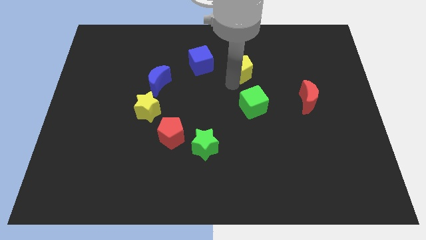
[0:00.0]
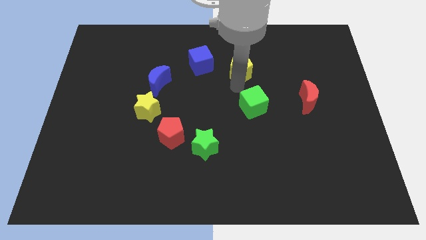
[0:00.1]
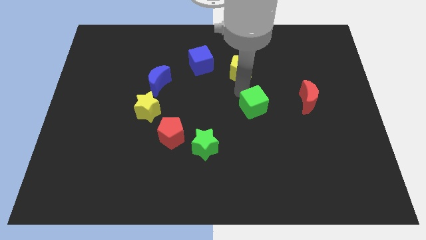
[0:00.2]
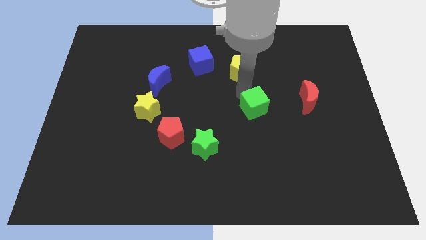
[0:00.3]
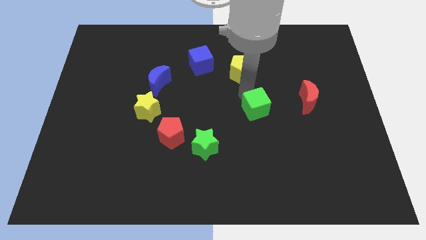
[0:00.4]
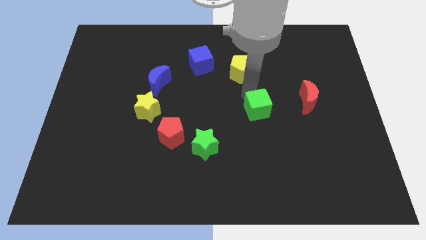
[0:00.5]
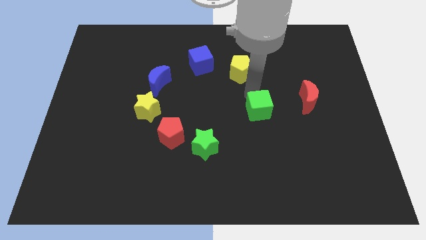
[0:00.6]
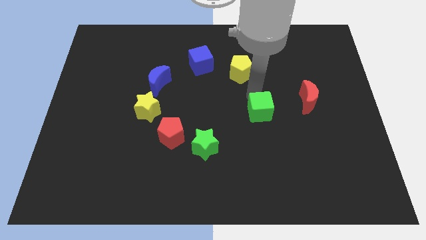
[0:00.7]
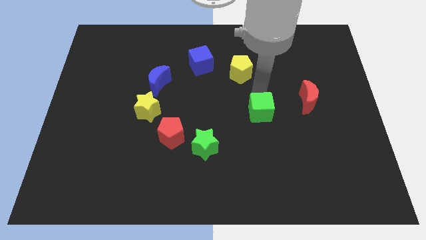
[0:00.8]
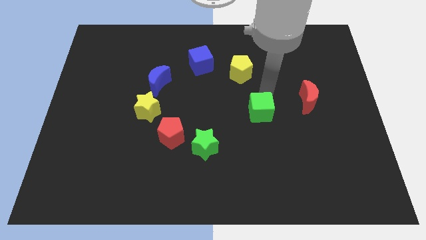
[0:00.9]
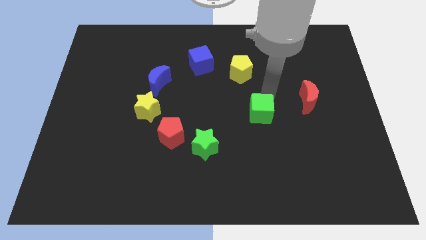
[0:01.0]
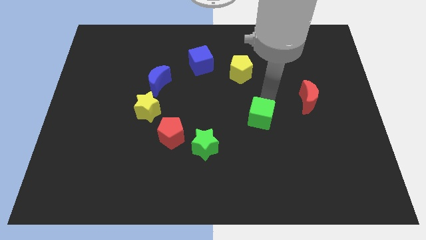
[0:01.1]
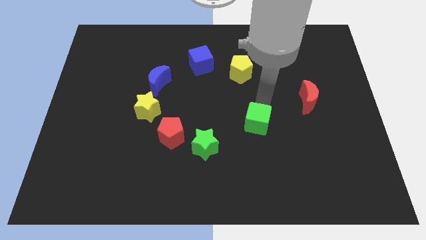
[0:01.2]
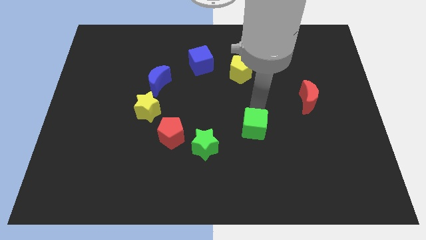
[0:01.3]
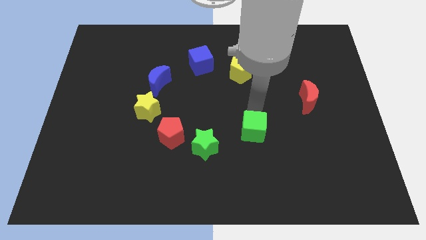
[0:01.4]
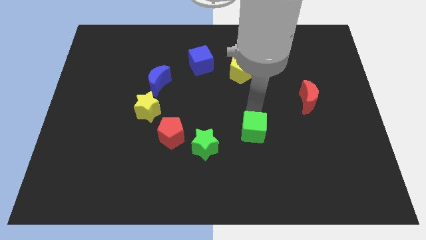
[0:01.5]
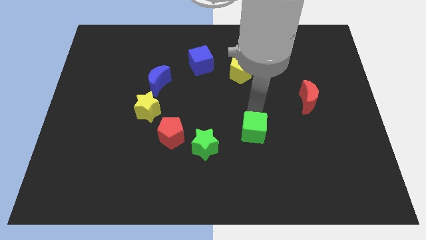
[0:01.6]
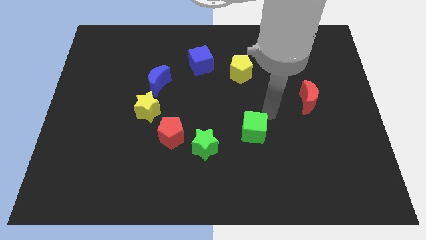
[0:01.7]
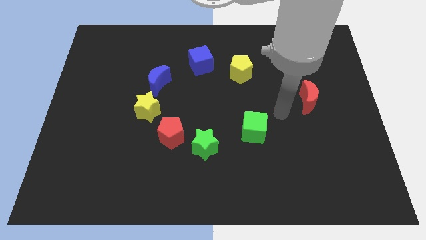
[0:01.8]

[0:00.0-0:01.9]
move green cube towards the green star

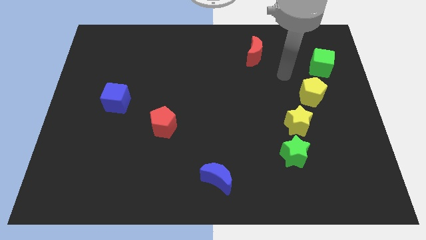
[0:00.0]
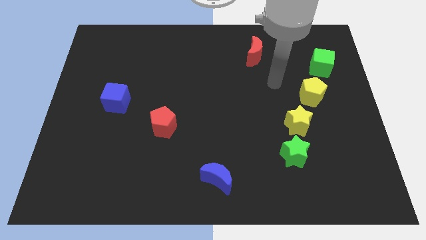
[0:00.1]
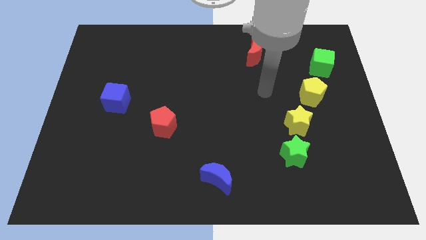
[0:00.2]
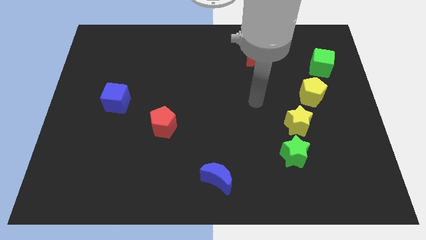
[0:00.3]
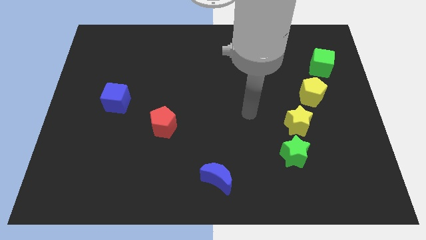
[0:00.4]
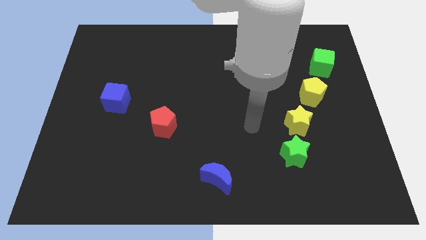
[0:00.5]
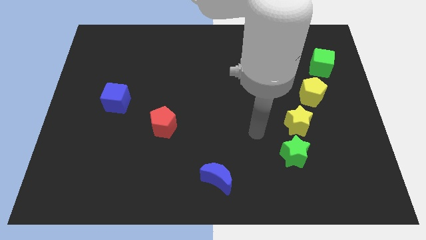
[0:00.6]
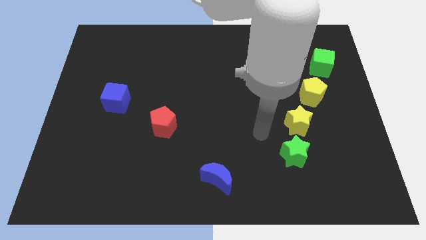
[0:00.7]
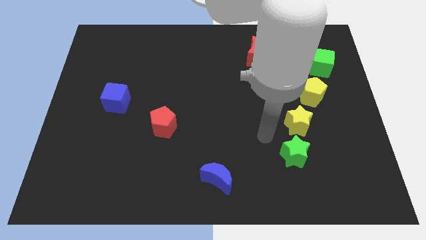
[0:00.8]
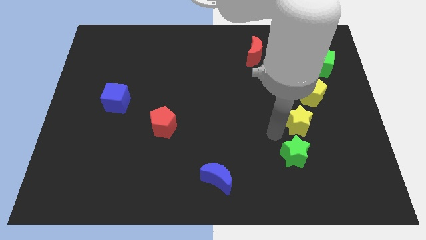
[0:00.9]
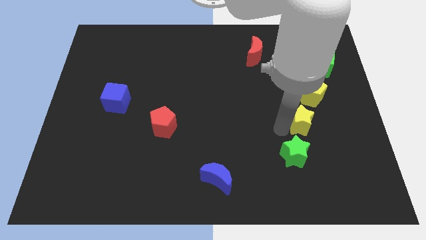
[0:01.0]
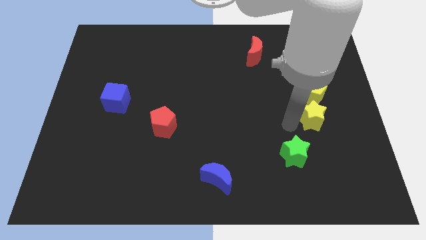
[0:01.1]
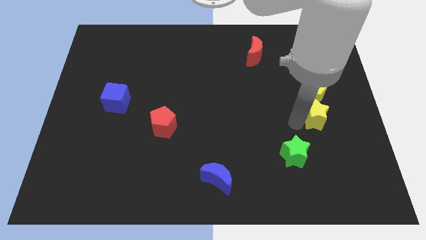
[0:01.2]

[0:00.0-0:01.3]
push the yellow star to the bottom of the yellow pentagon

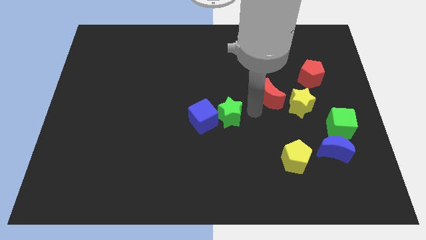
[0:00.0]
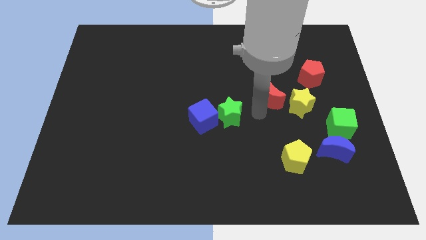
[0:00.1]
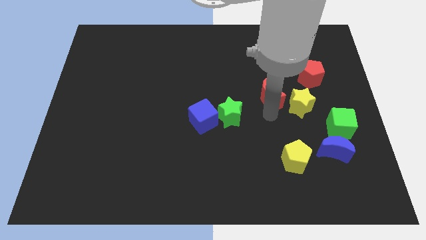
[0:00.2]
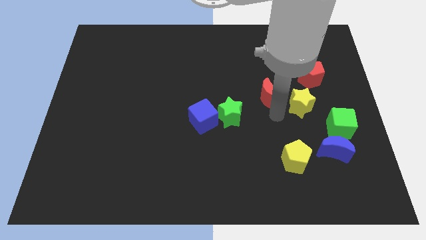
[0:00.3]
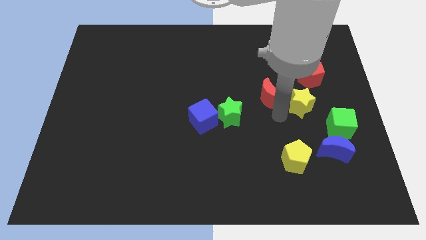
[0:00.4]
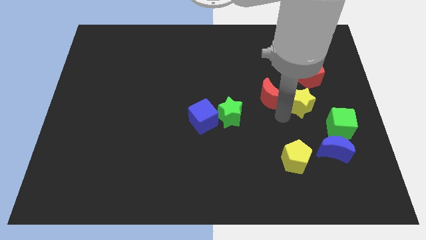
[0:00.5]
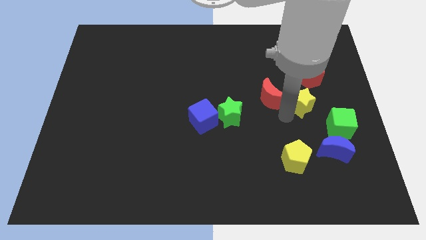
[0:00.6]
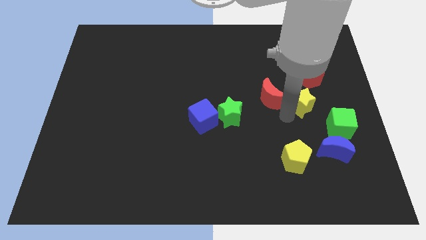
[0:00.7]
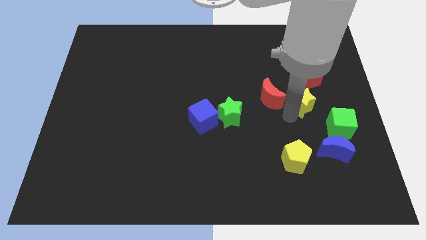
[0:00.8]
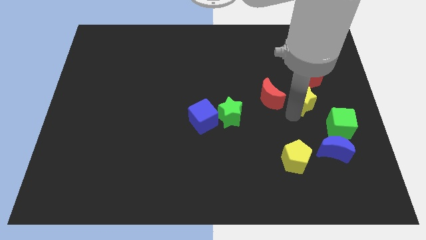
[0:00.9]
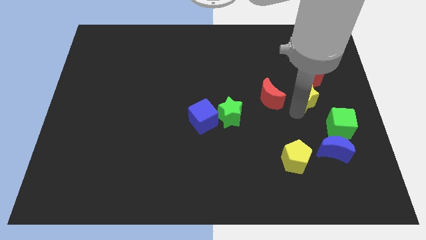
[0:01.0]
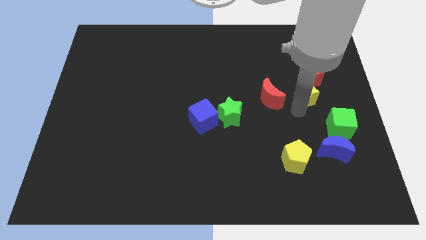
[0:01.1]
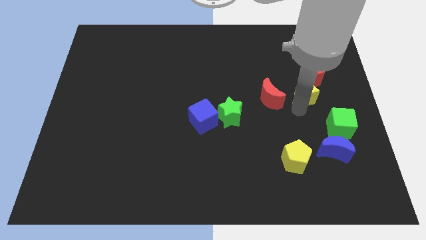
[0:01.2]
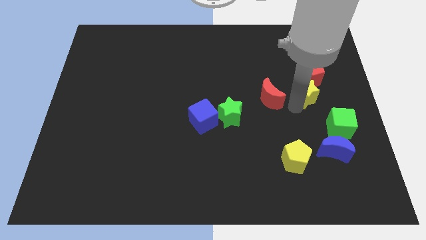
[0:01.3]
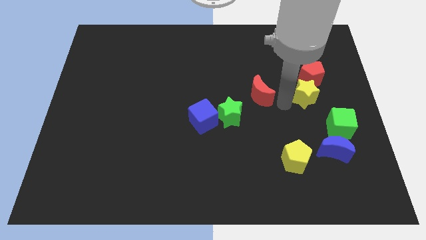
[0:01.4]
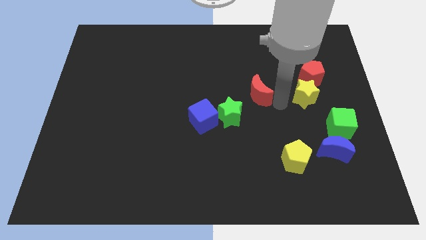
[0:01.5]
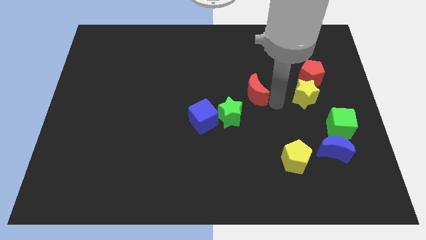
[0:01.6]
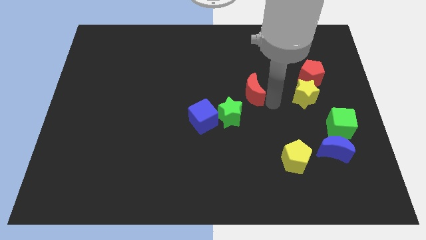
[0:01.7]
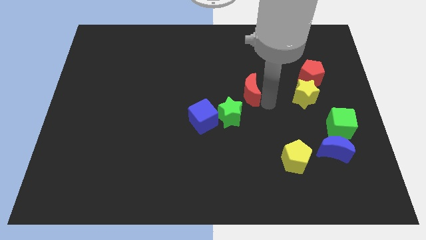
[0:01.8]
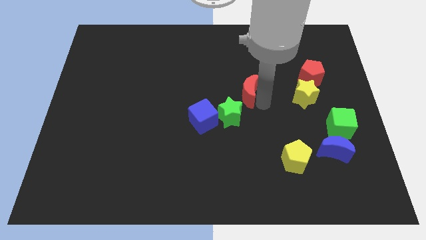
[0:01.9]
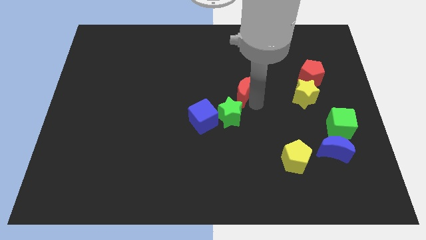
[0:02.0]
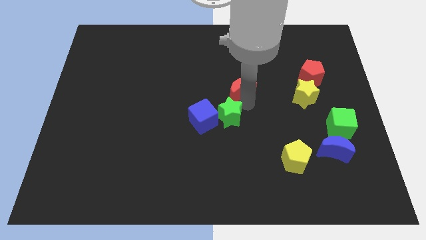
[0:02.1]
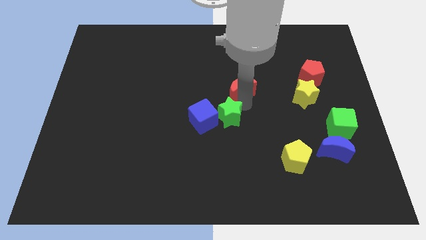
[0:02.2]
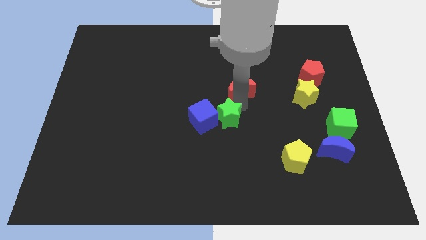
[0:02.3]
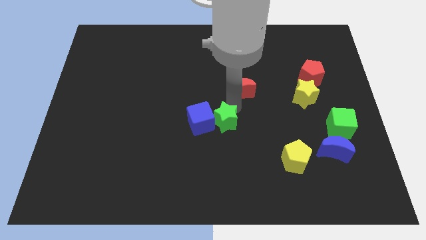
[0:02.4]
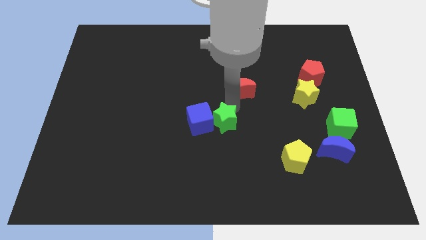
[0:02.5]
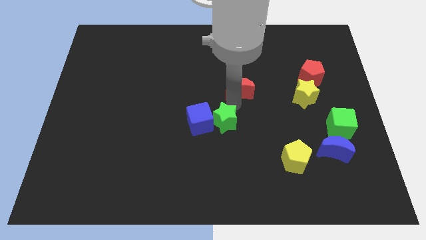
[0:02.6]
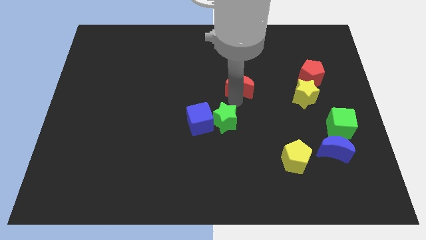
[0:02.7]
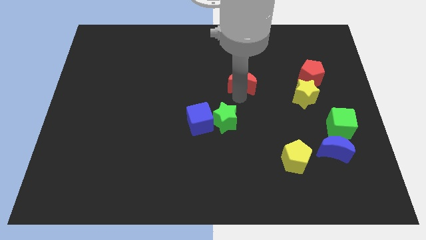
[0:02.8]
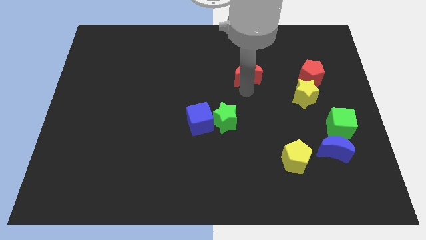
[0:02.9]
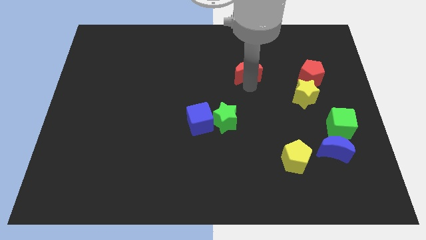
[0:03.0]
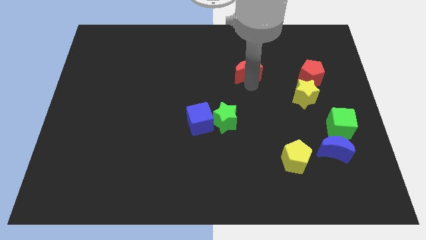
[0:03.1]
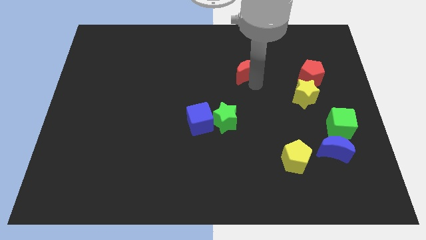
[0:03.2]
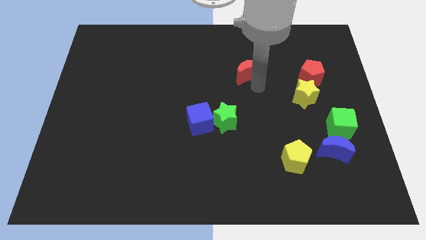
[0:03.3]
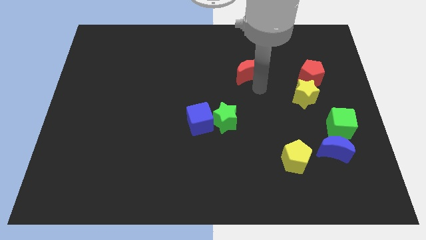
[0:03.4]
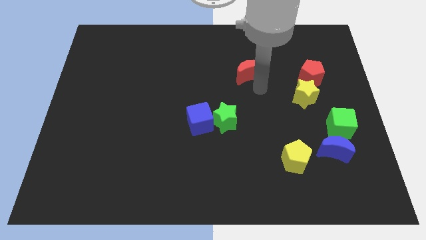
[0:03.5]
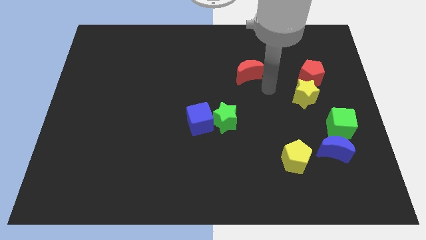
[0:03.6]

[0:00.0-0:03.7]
arrange the green star yellow star and red crescent in such a way to form a triangle

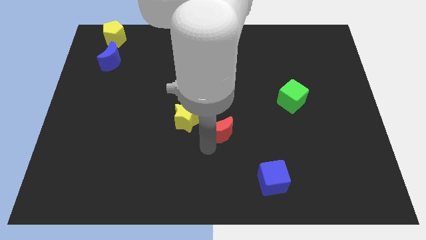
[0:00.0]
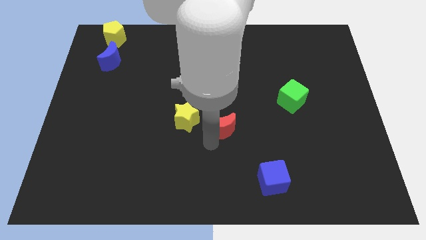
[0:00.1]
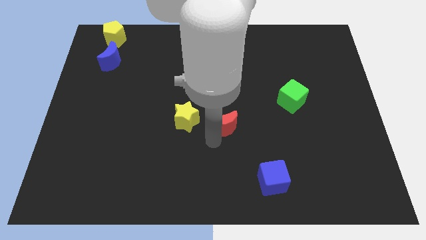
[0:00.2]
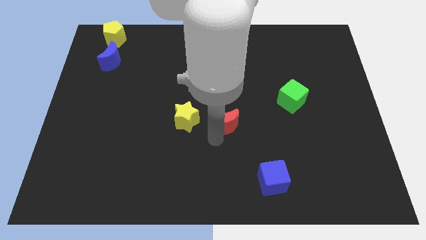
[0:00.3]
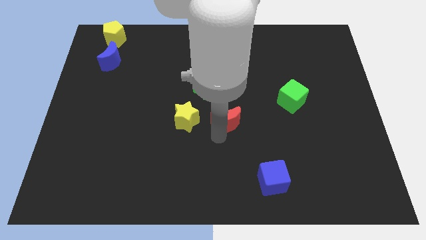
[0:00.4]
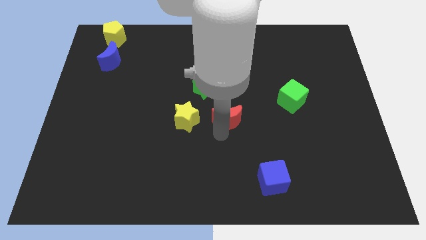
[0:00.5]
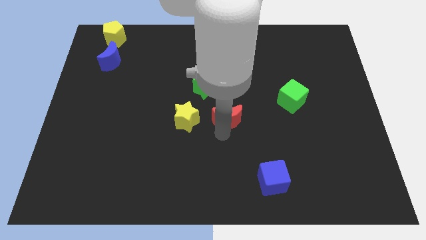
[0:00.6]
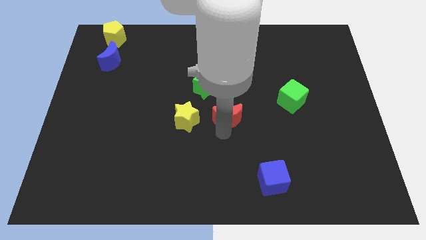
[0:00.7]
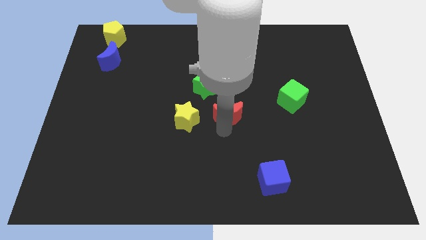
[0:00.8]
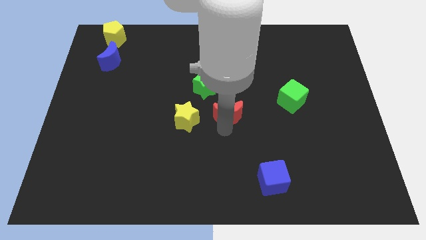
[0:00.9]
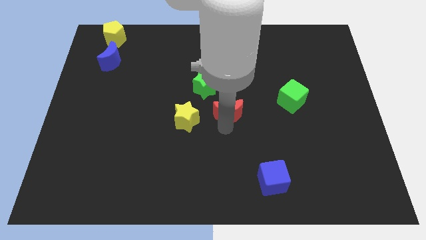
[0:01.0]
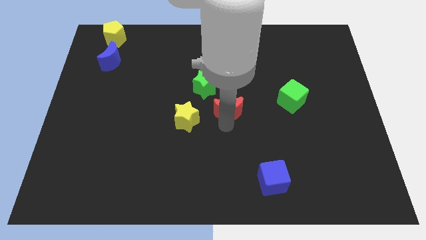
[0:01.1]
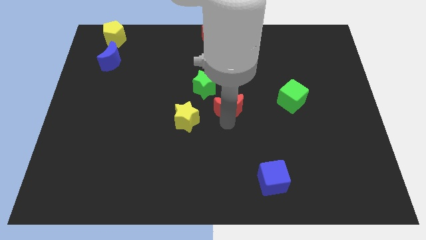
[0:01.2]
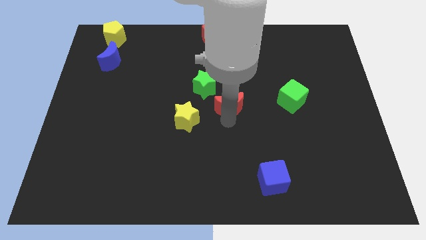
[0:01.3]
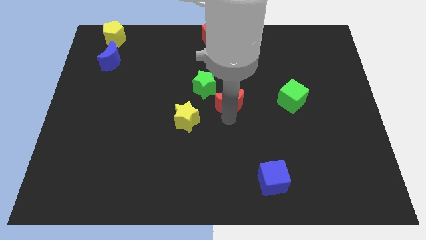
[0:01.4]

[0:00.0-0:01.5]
push the red crescent towards the green star

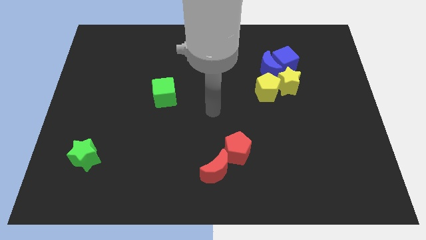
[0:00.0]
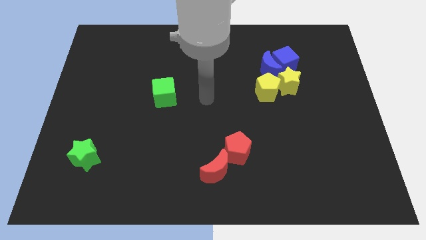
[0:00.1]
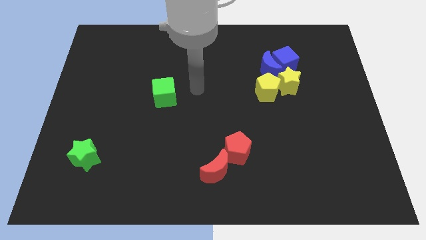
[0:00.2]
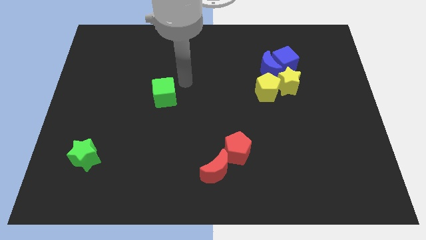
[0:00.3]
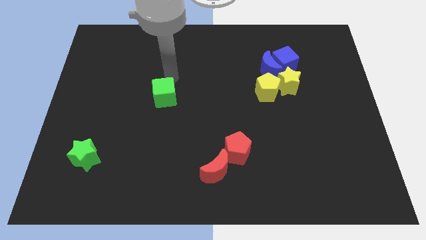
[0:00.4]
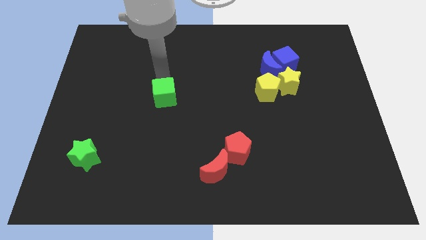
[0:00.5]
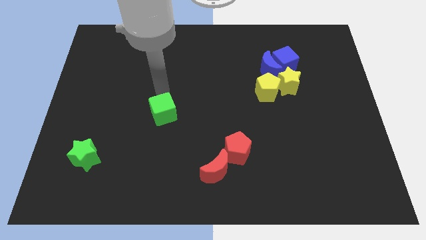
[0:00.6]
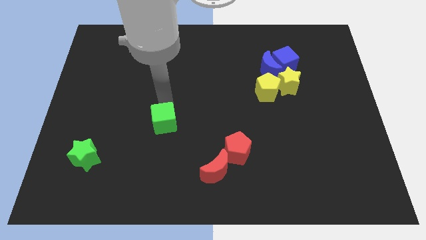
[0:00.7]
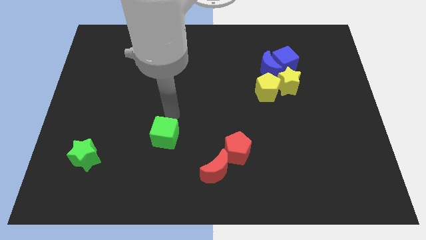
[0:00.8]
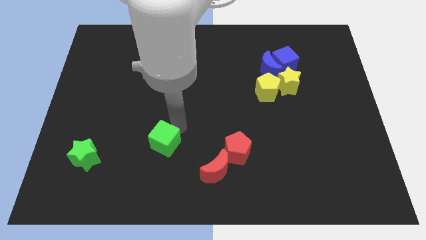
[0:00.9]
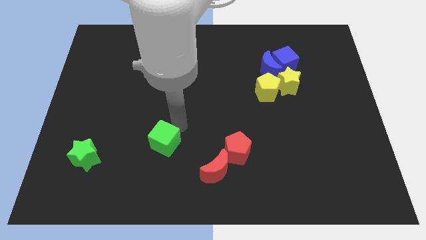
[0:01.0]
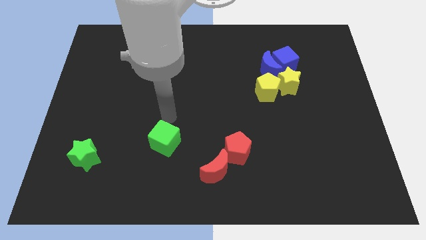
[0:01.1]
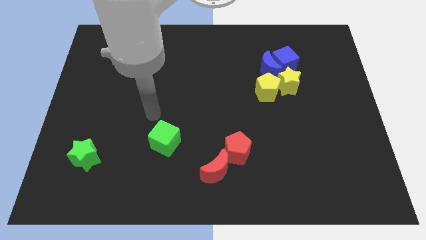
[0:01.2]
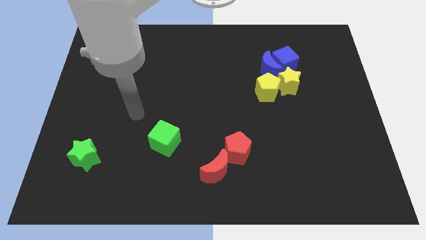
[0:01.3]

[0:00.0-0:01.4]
push the green cube towards the bottom center of the board
